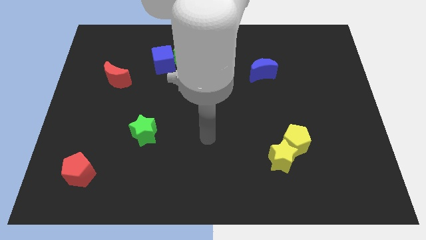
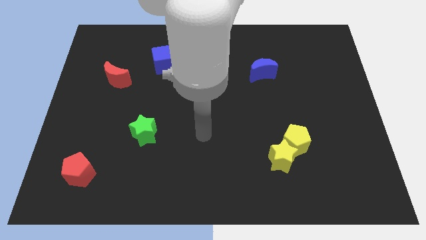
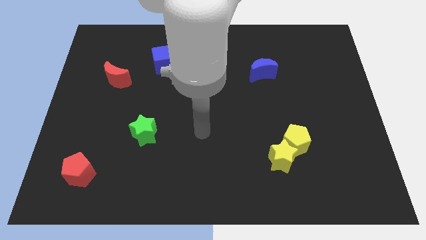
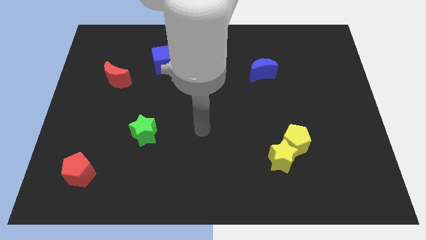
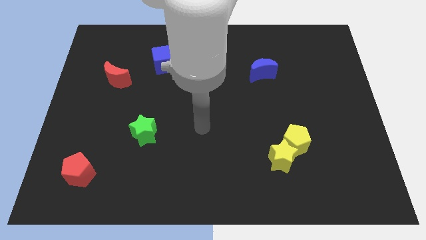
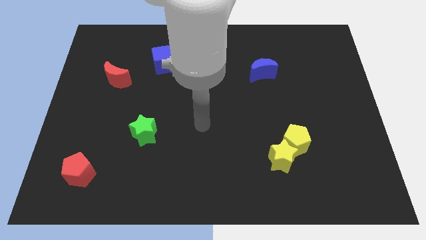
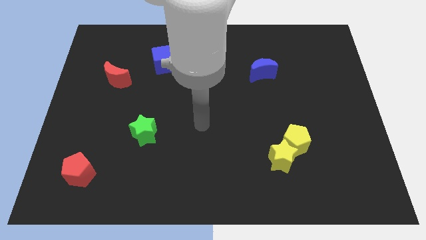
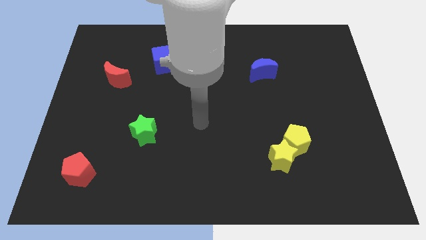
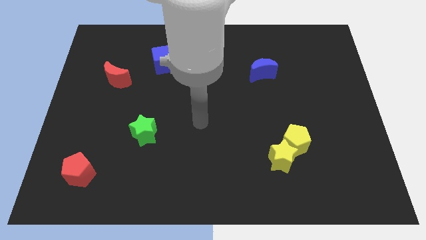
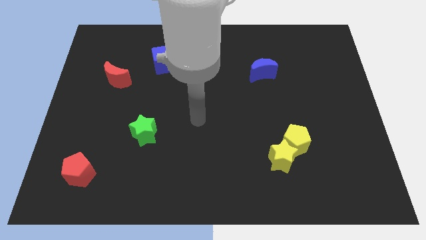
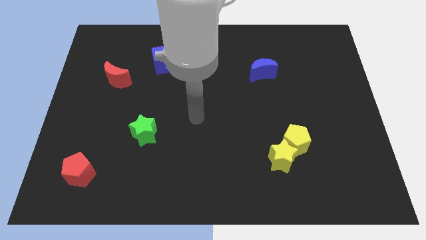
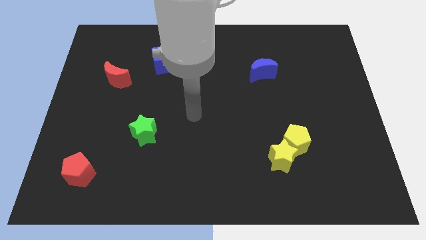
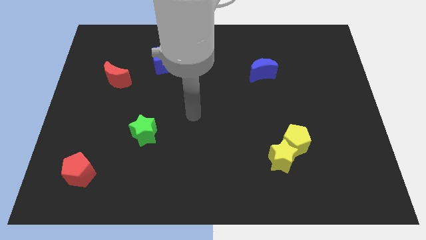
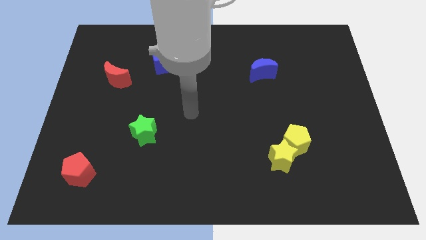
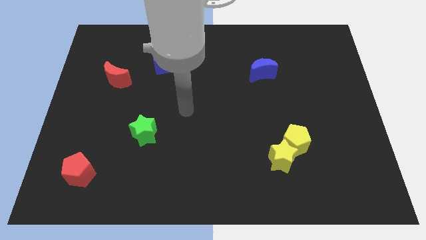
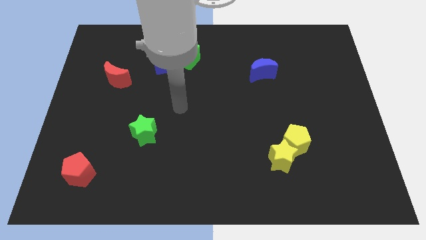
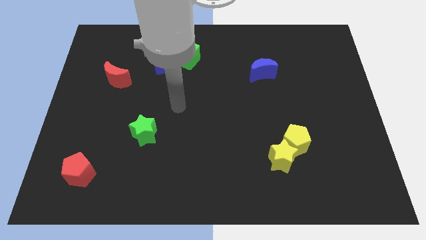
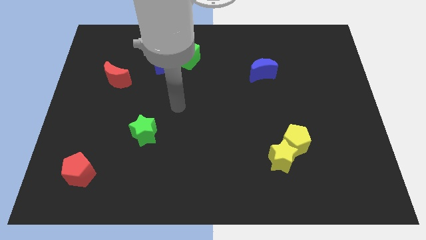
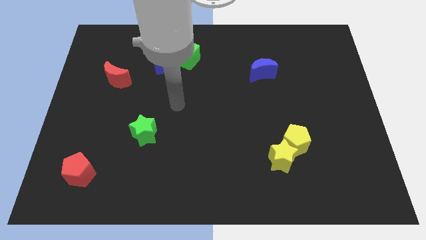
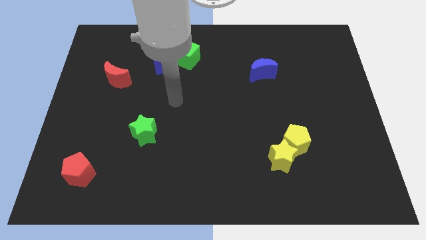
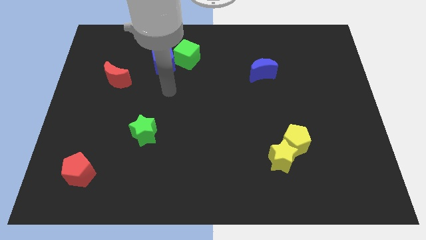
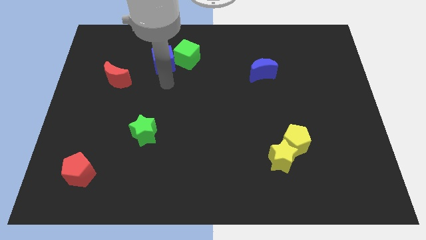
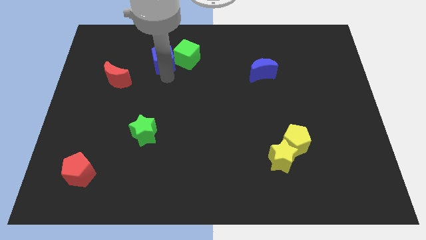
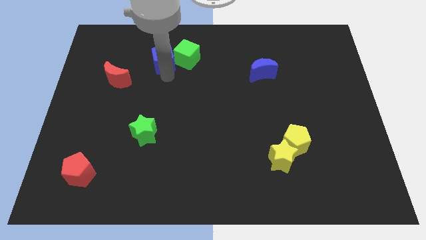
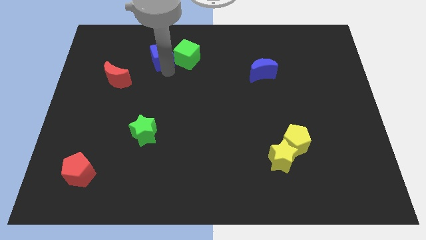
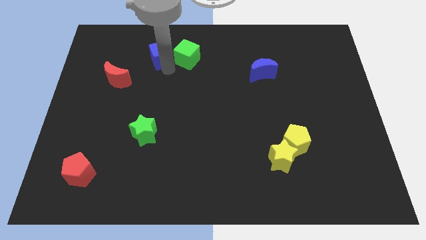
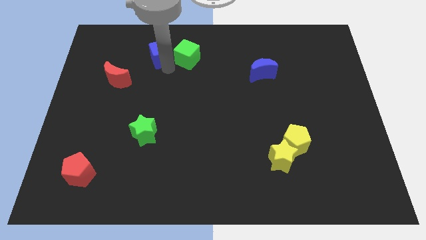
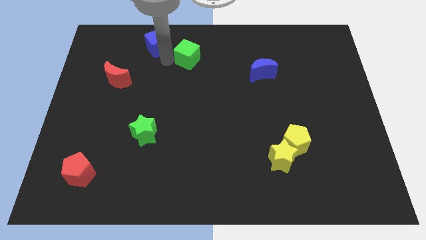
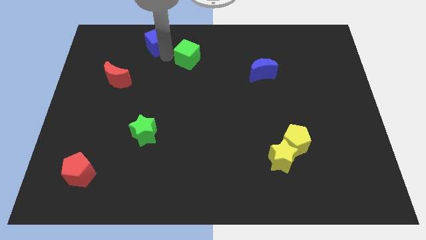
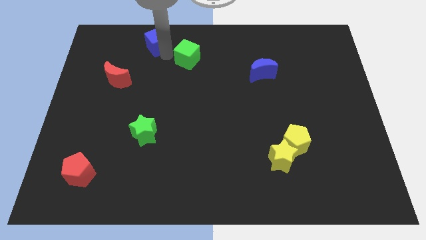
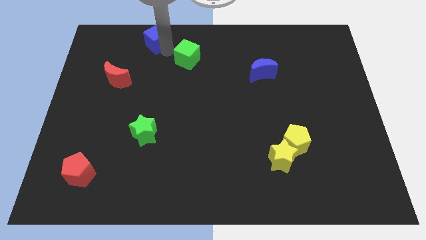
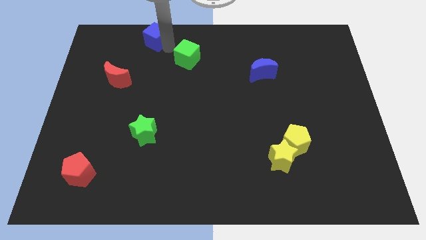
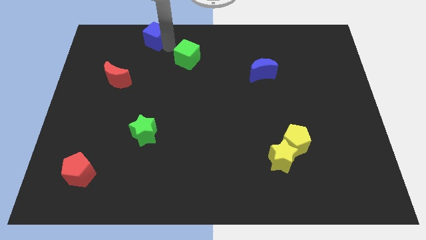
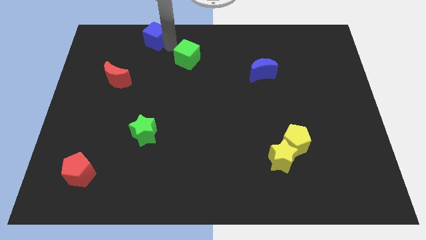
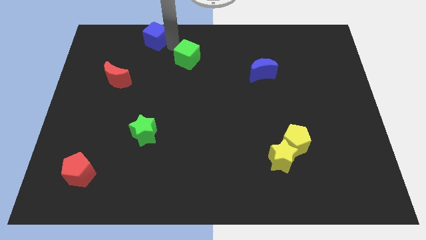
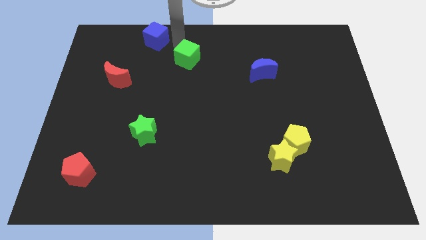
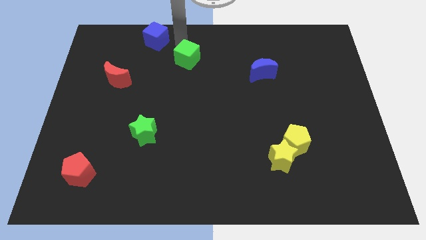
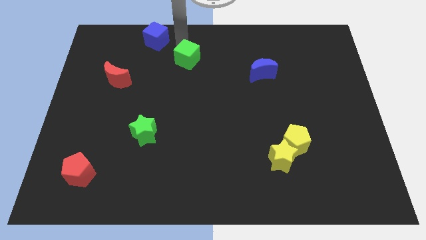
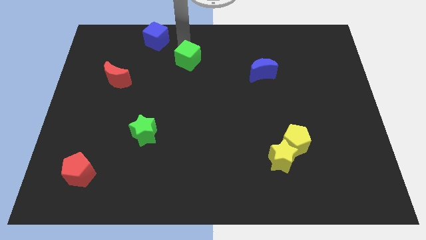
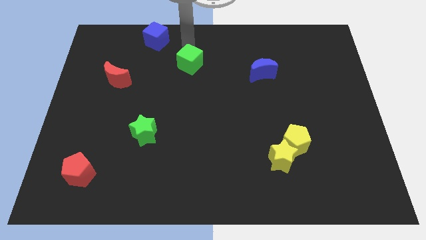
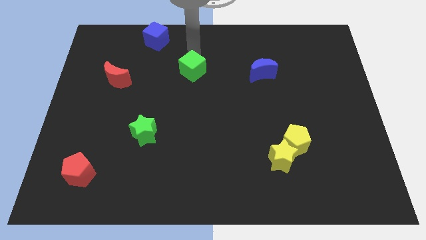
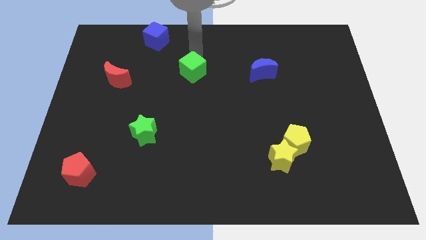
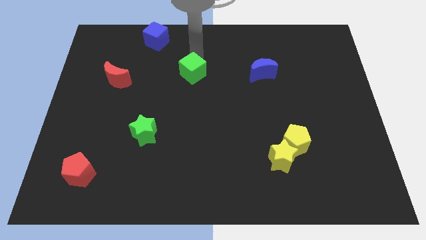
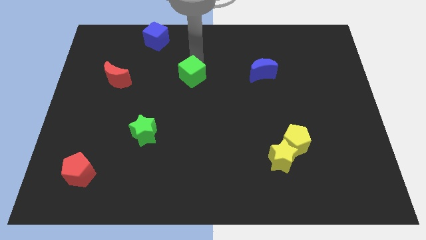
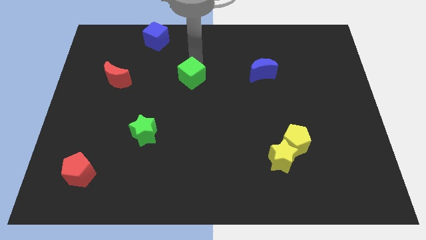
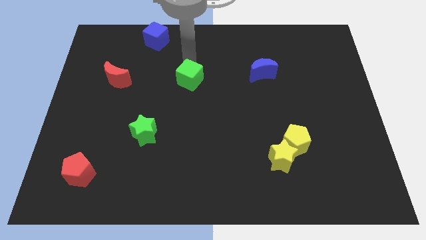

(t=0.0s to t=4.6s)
place green cube in between the blue moon and red moon

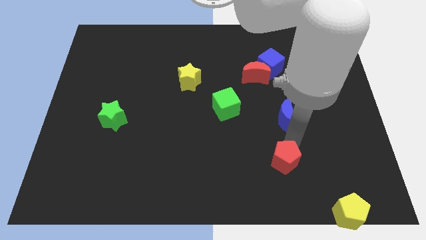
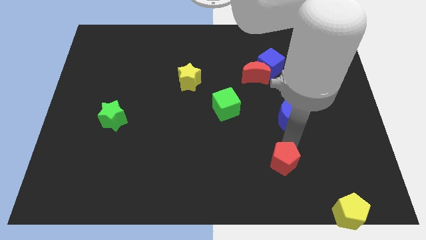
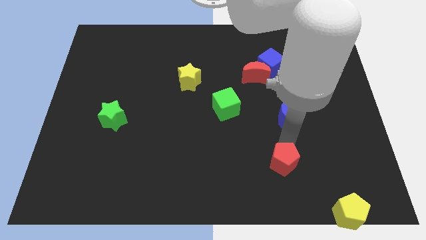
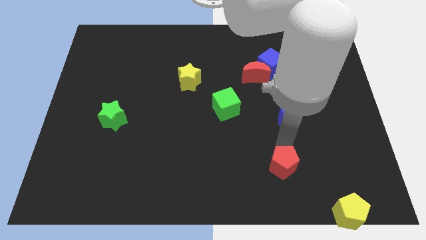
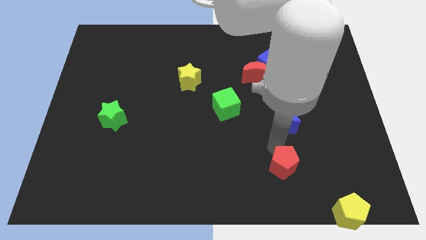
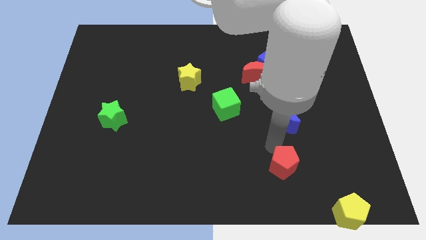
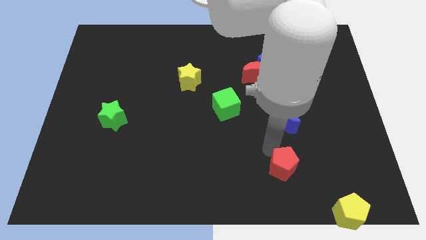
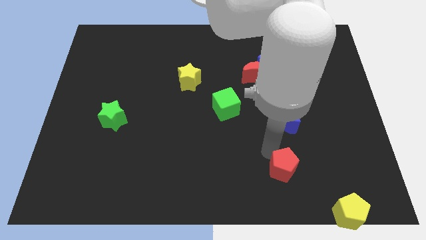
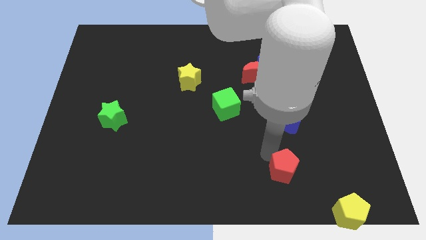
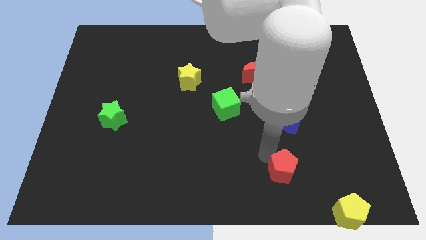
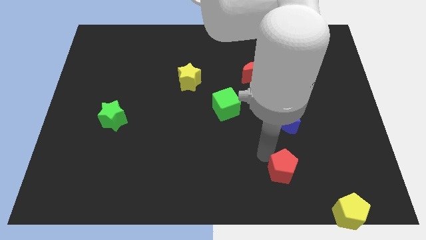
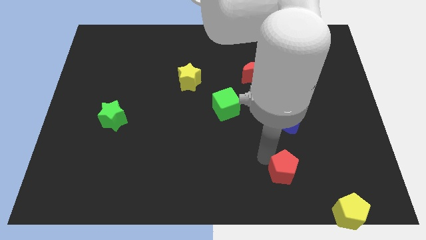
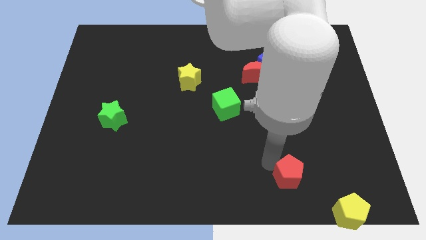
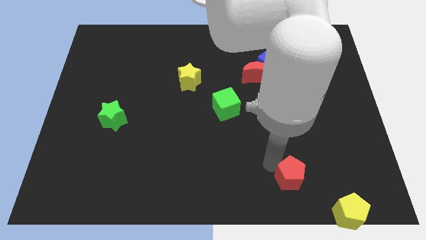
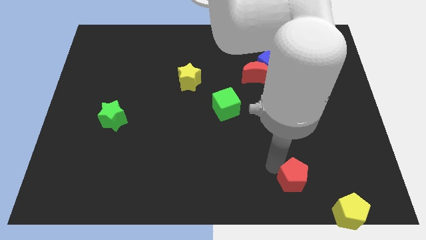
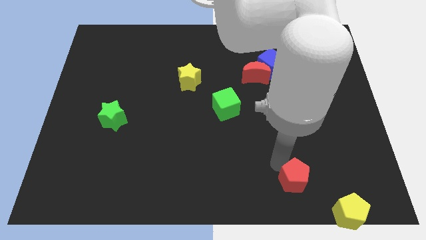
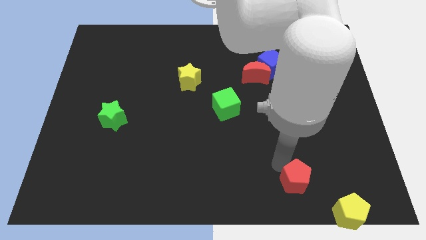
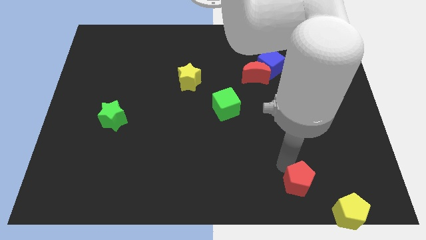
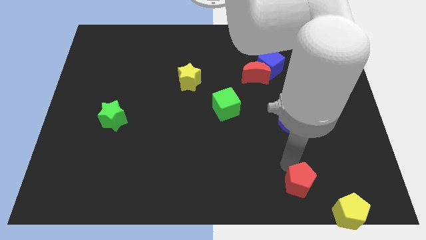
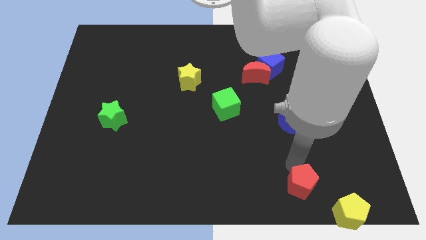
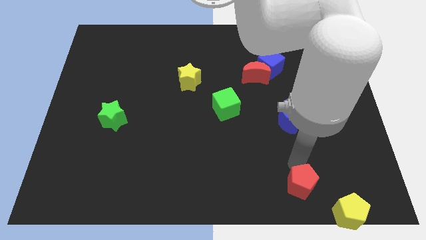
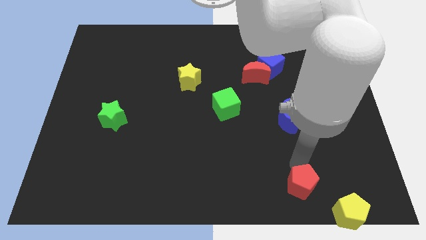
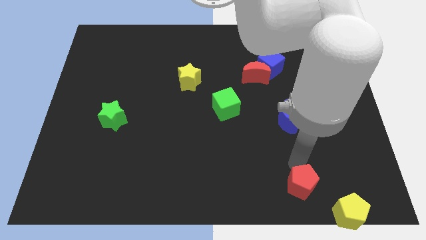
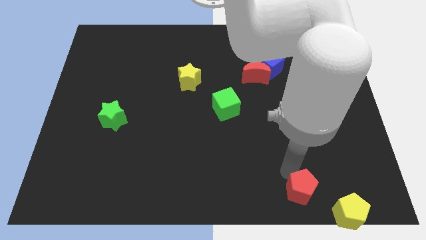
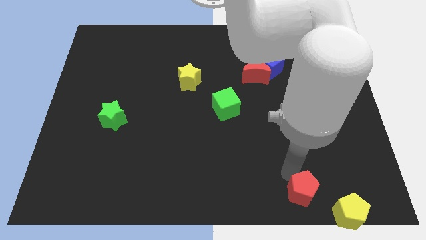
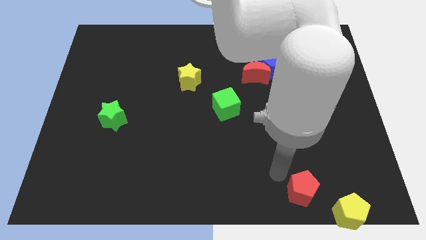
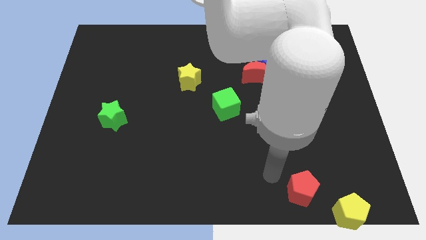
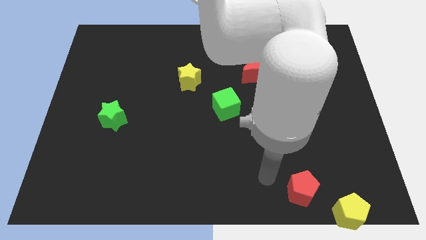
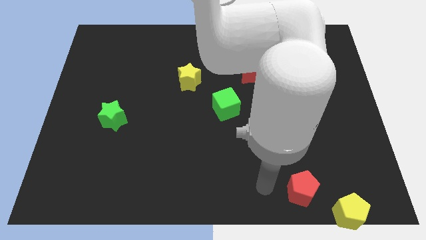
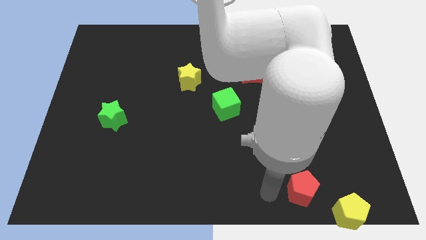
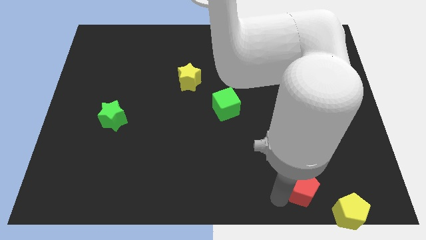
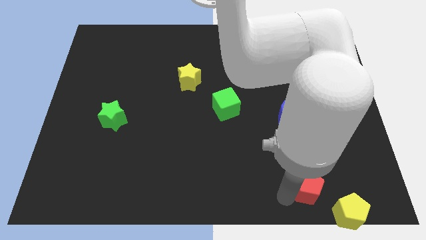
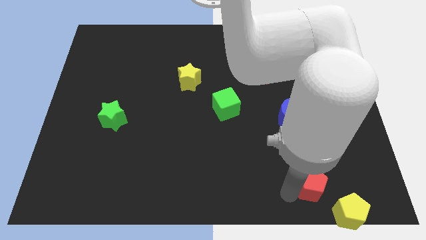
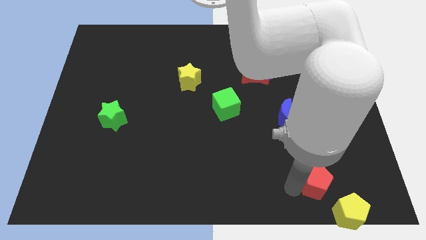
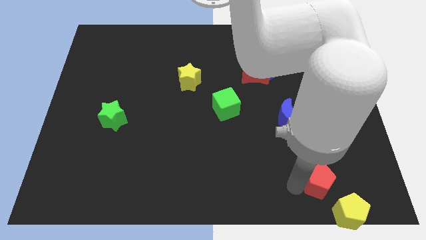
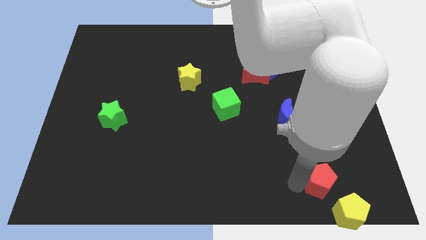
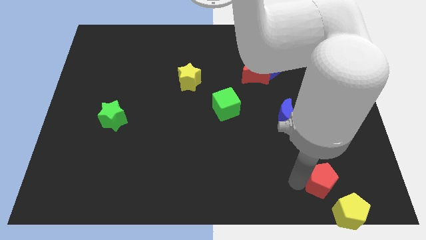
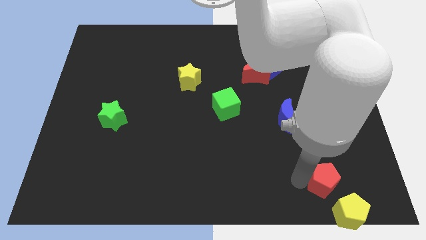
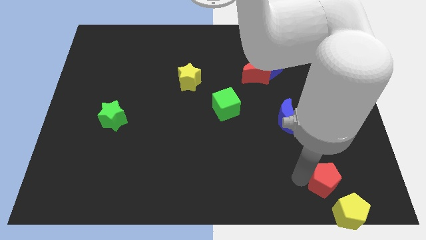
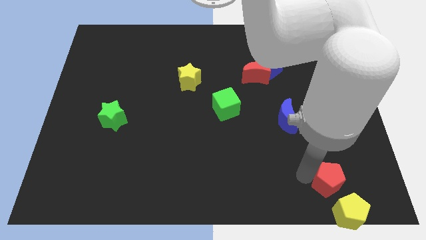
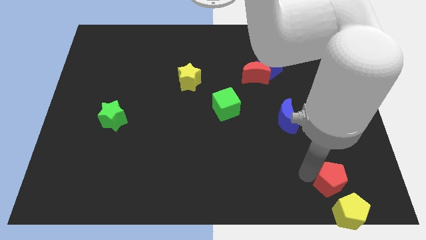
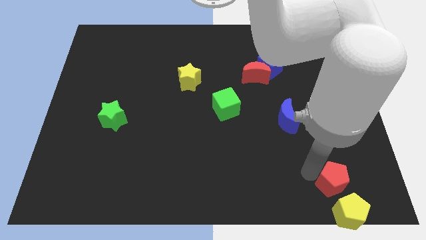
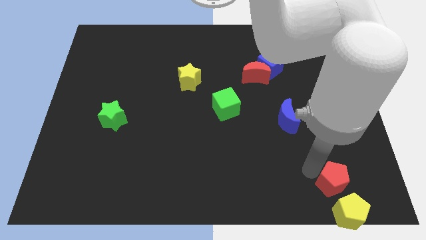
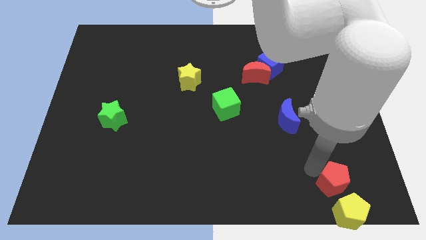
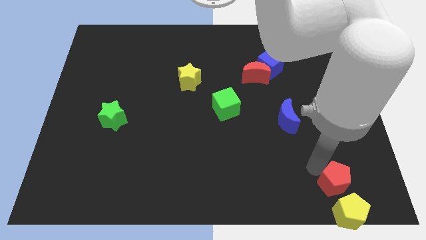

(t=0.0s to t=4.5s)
push the red pentagon to the top of the yellow pentagon
